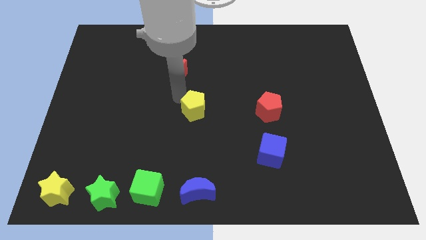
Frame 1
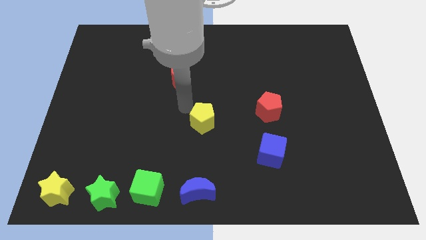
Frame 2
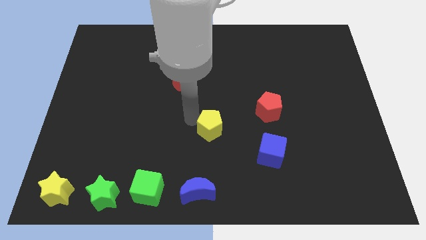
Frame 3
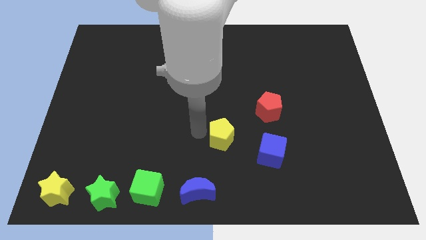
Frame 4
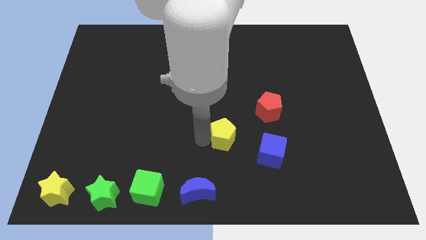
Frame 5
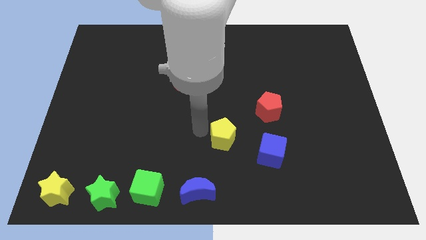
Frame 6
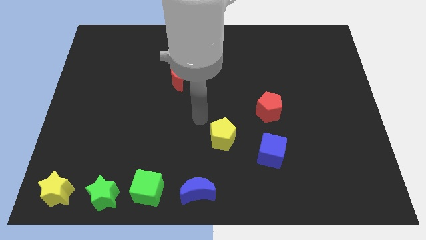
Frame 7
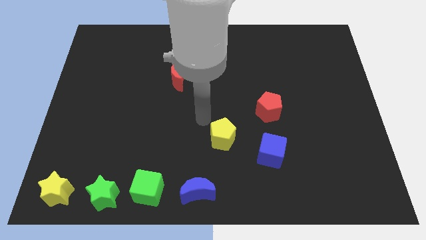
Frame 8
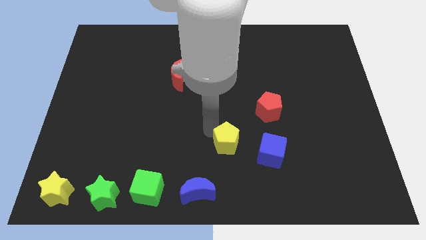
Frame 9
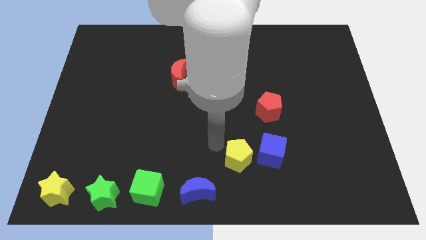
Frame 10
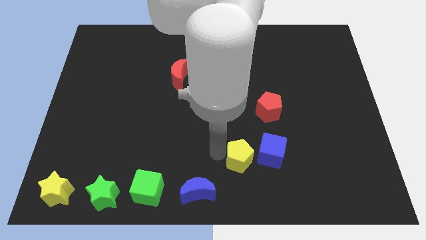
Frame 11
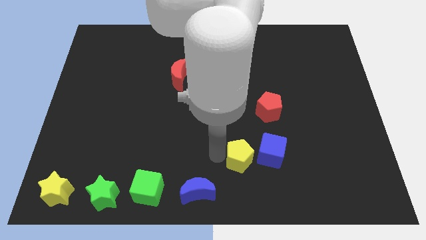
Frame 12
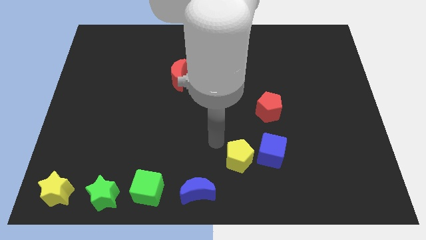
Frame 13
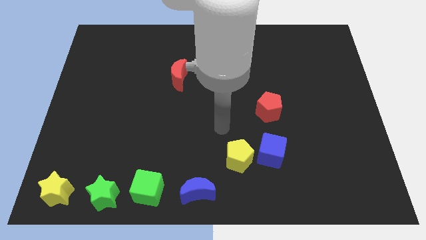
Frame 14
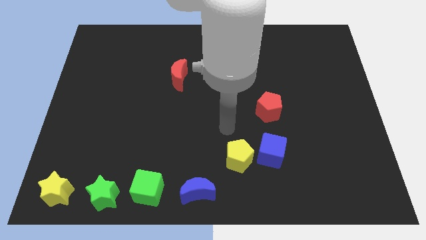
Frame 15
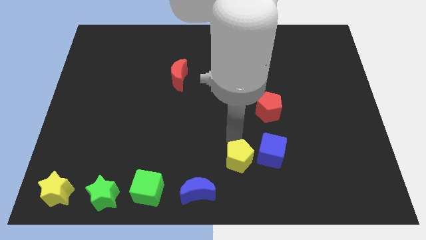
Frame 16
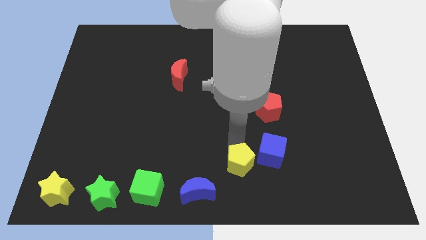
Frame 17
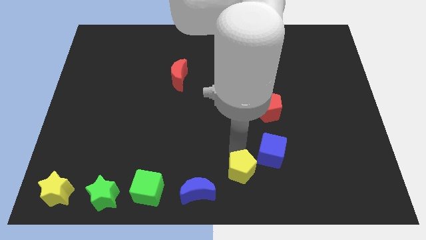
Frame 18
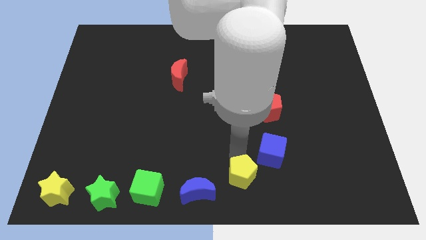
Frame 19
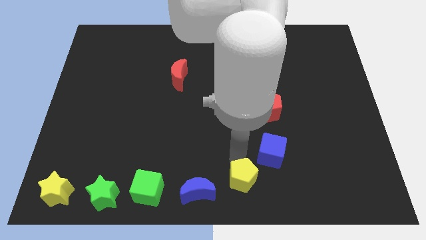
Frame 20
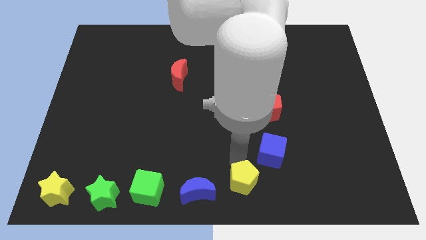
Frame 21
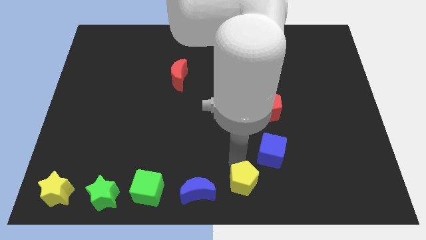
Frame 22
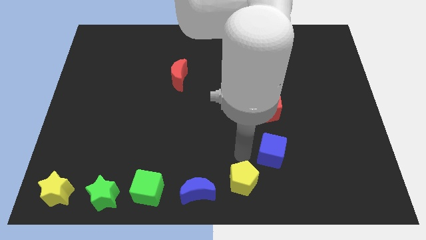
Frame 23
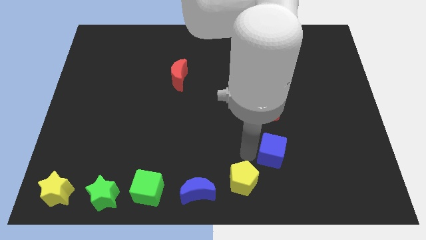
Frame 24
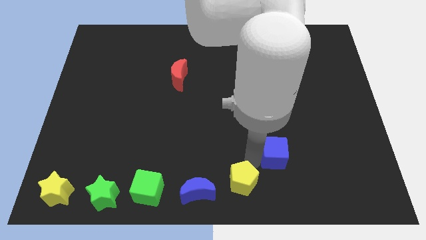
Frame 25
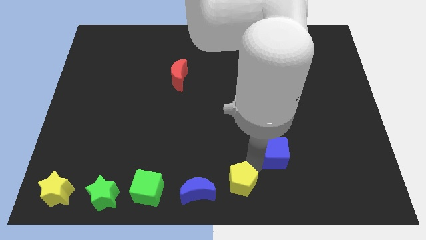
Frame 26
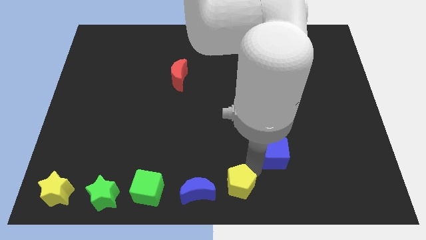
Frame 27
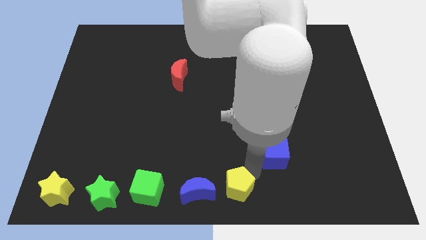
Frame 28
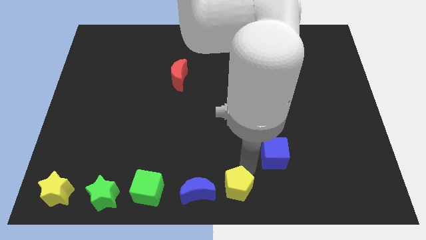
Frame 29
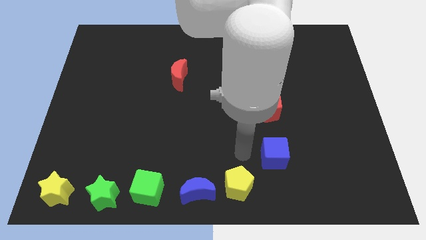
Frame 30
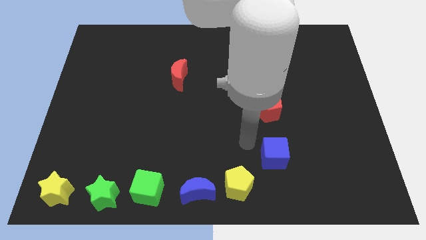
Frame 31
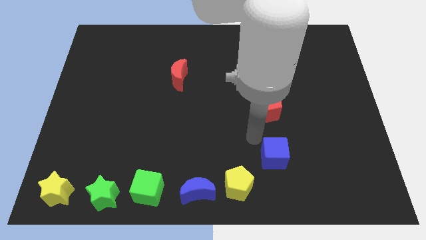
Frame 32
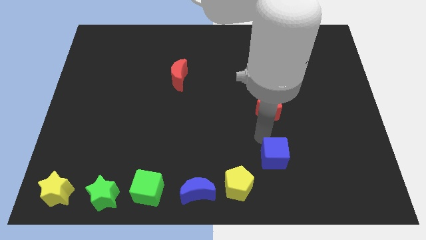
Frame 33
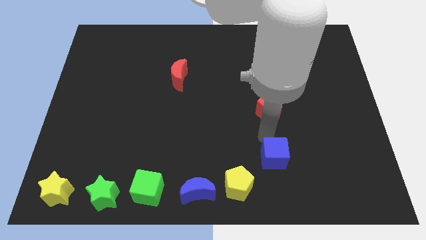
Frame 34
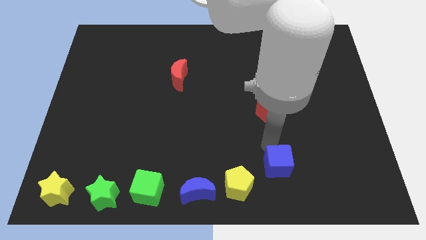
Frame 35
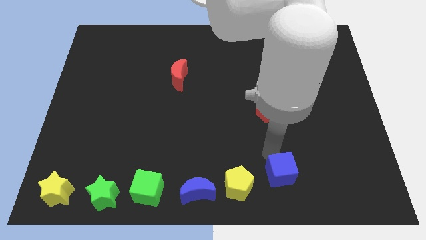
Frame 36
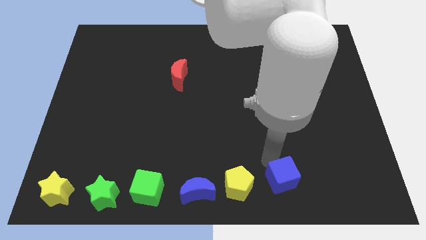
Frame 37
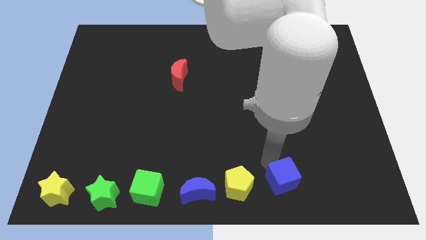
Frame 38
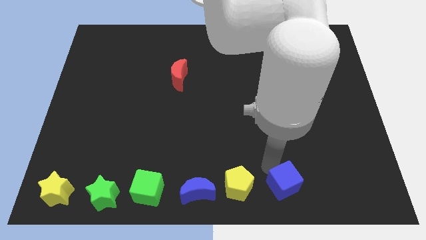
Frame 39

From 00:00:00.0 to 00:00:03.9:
place the yellow pentagon to the right of the blue crescent

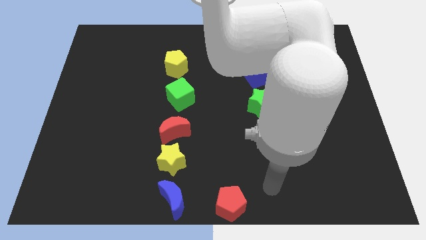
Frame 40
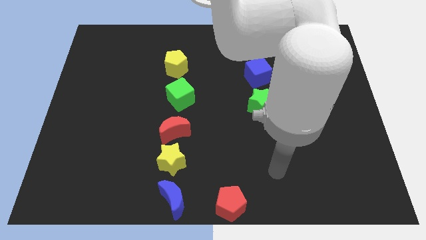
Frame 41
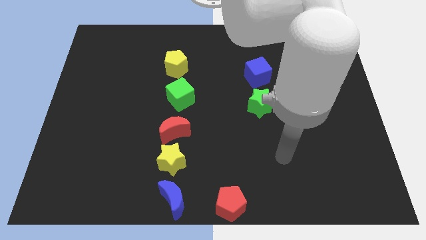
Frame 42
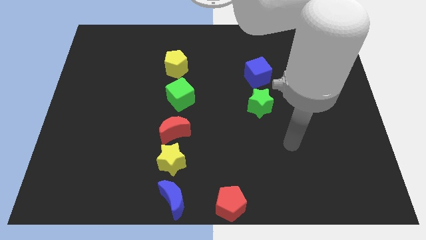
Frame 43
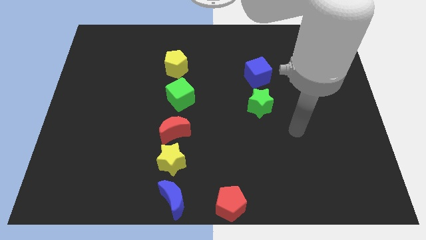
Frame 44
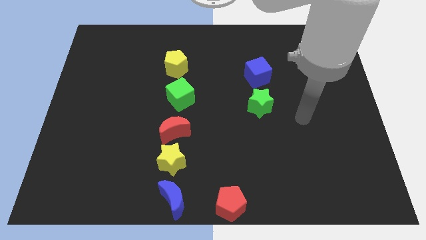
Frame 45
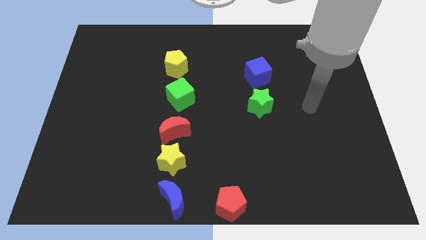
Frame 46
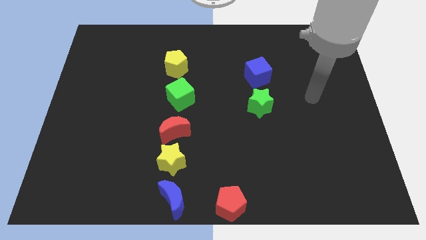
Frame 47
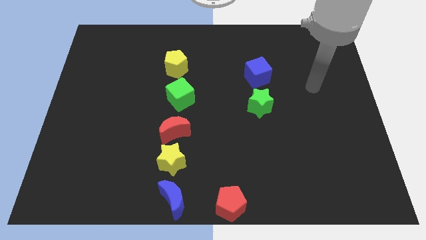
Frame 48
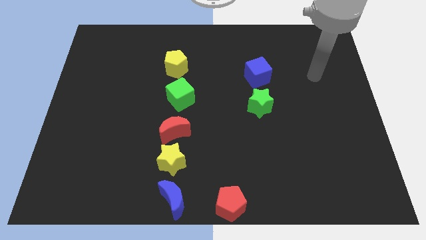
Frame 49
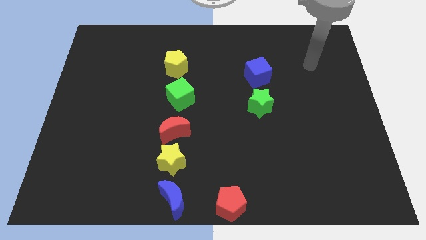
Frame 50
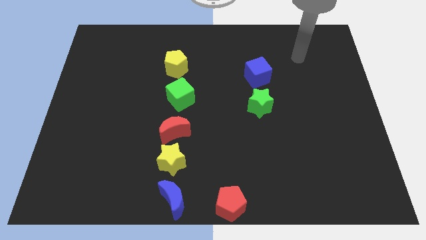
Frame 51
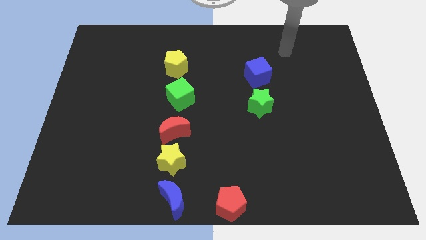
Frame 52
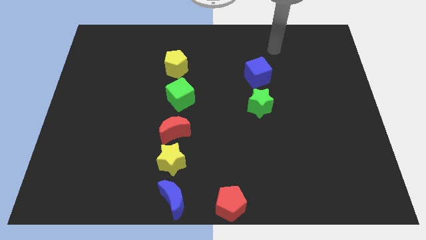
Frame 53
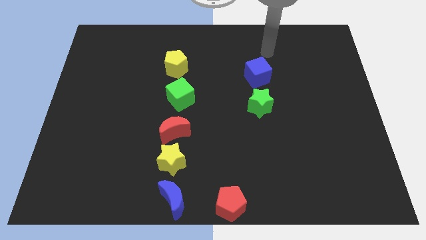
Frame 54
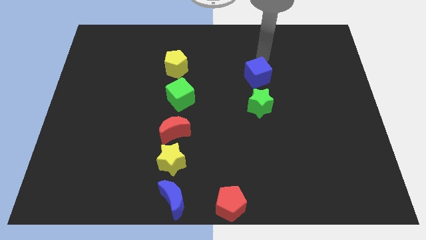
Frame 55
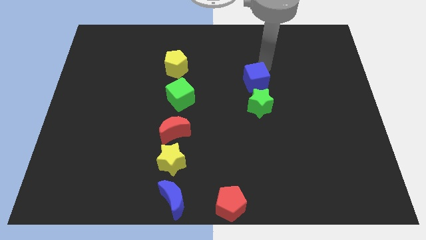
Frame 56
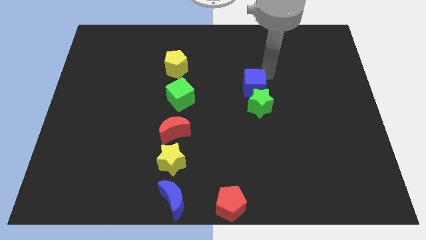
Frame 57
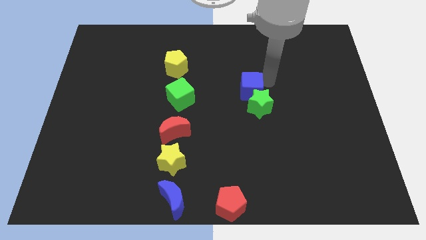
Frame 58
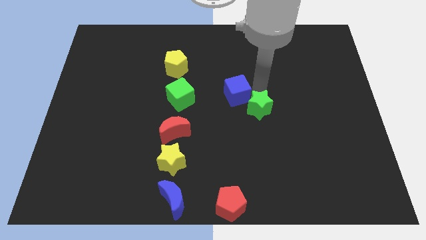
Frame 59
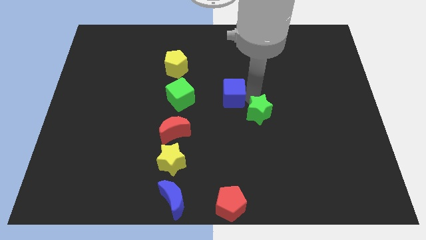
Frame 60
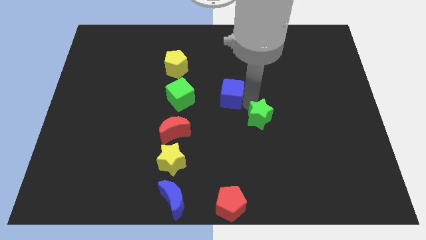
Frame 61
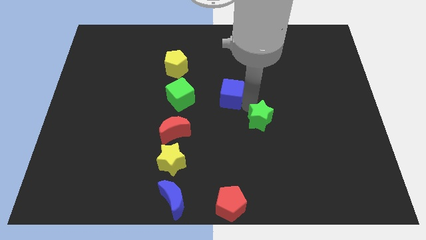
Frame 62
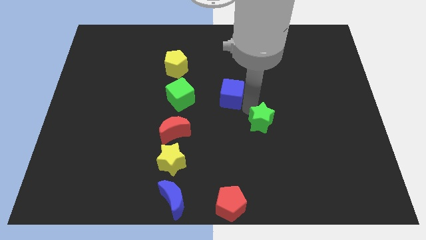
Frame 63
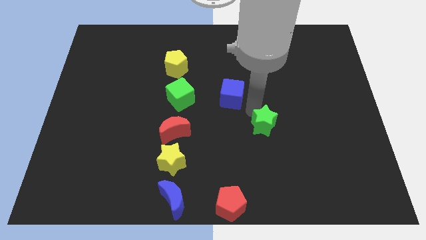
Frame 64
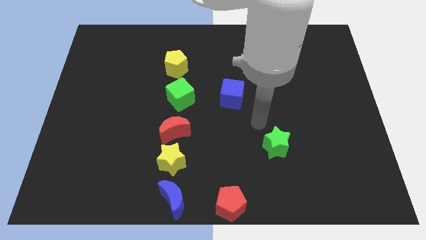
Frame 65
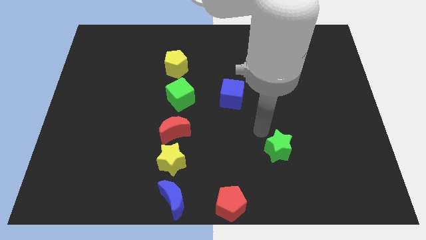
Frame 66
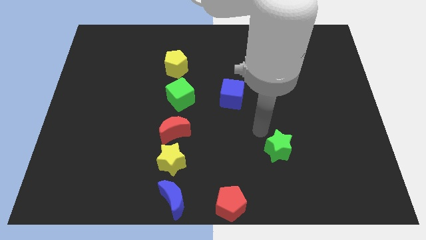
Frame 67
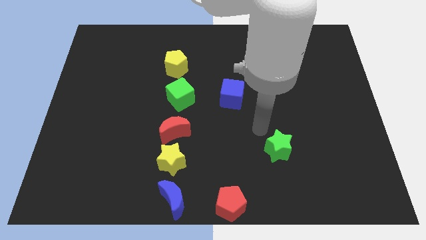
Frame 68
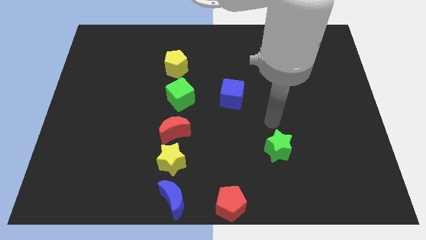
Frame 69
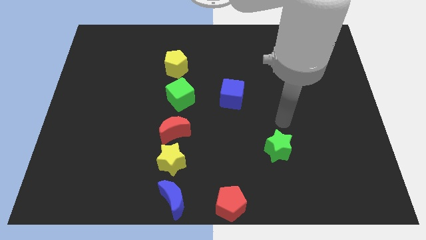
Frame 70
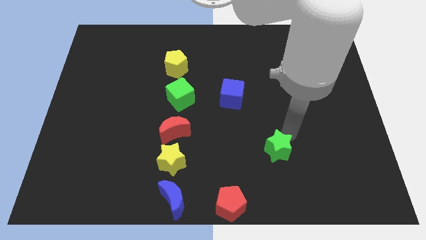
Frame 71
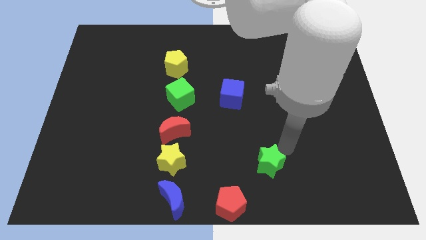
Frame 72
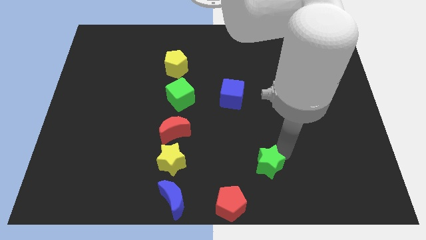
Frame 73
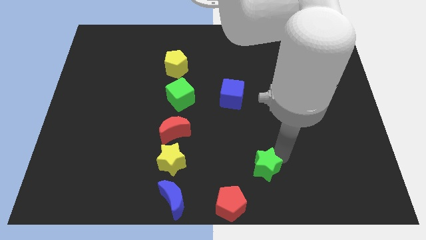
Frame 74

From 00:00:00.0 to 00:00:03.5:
place the green star at the top right side of red pentagon

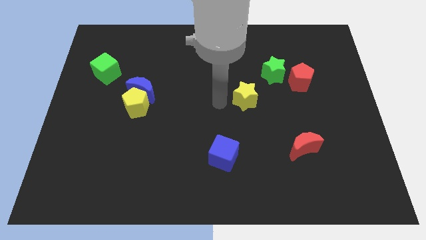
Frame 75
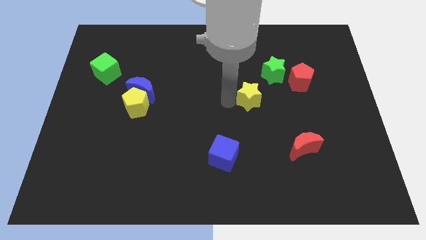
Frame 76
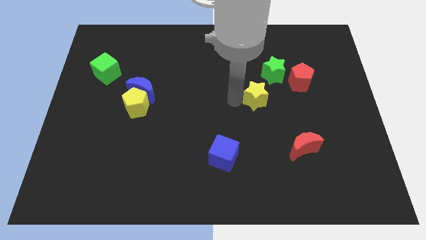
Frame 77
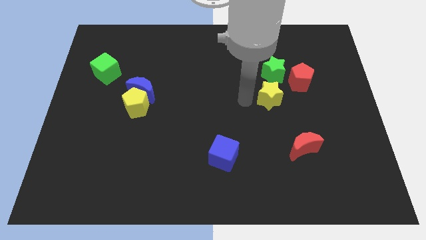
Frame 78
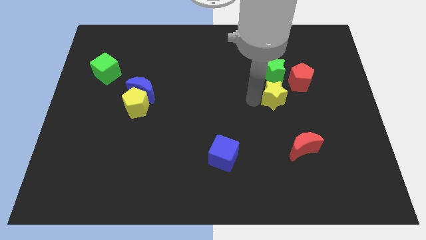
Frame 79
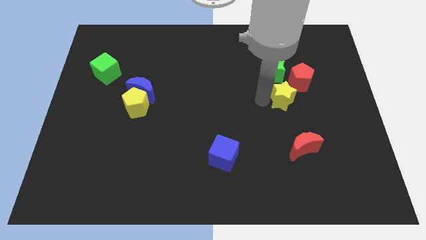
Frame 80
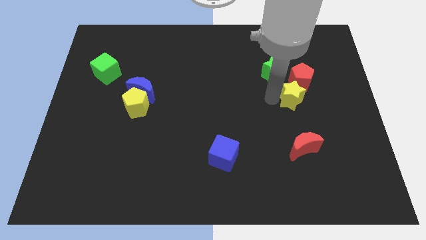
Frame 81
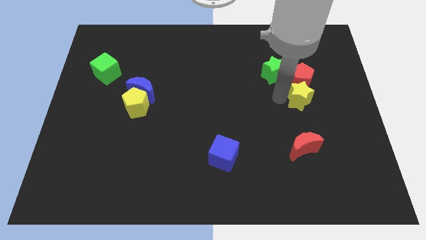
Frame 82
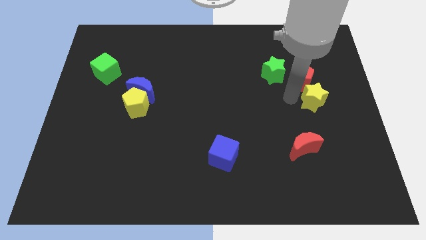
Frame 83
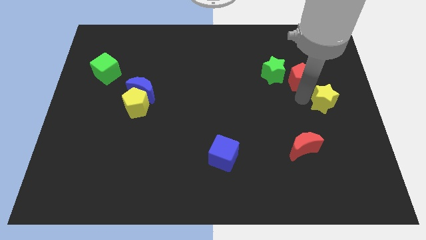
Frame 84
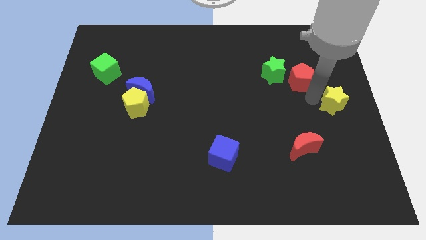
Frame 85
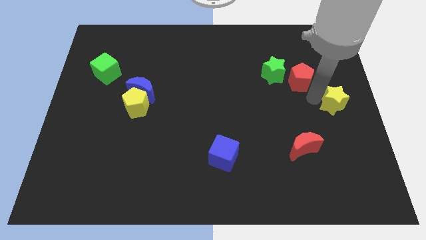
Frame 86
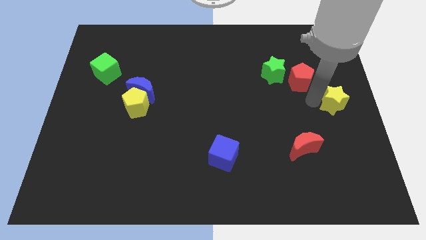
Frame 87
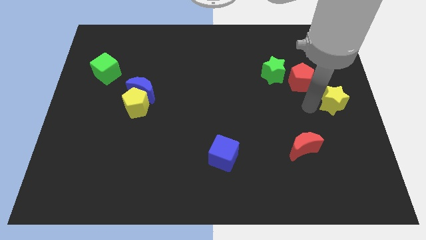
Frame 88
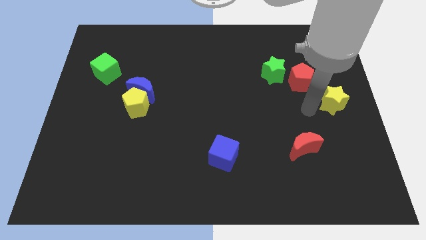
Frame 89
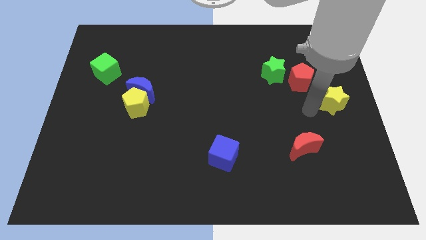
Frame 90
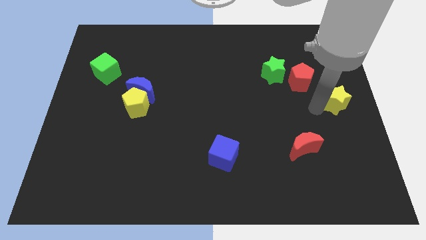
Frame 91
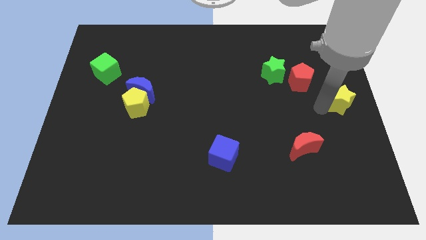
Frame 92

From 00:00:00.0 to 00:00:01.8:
put the yellow star diagonally bottom right to the red pentagon
